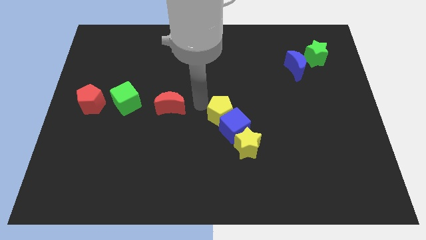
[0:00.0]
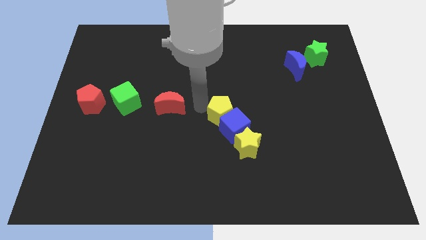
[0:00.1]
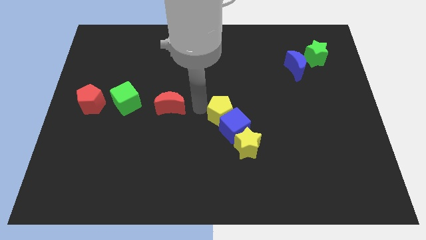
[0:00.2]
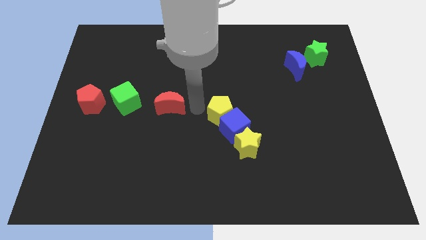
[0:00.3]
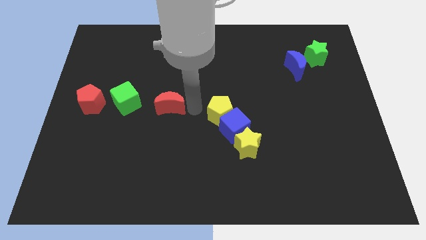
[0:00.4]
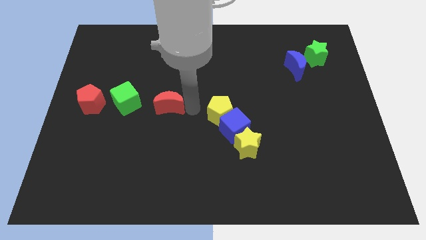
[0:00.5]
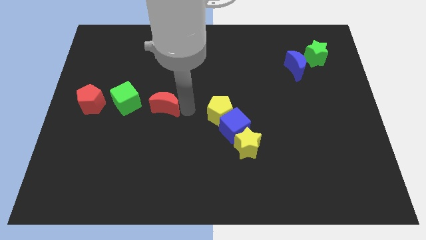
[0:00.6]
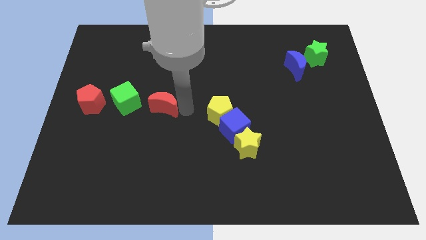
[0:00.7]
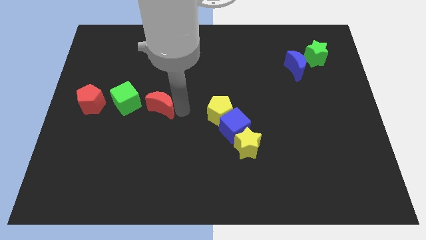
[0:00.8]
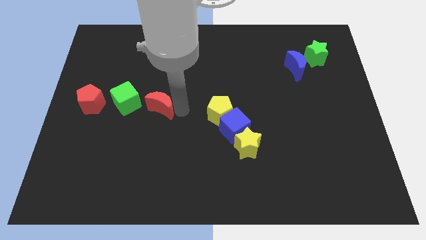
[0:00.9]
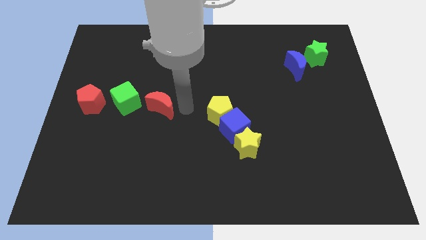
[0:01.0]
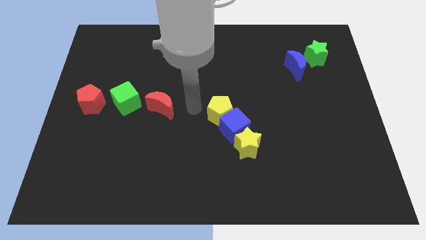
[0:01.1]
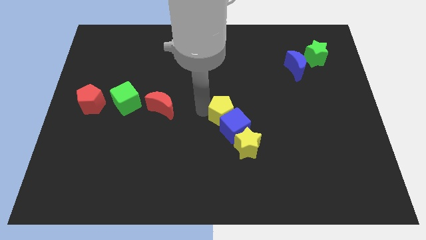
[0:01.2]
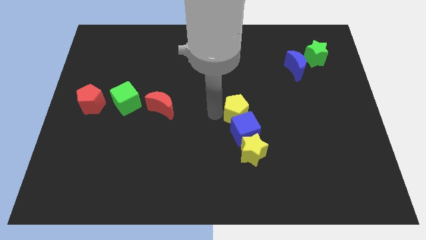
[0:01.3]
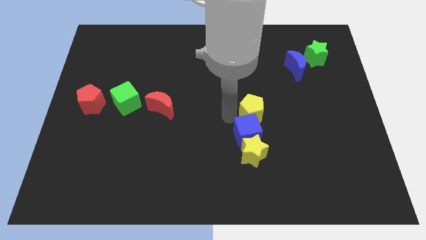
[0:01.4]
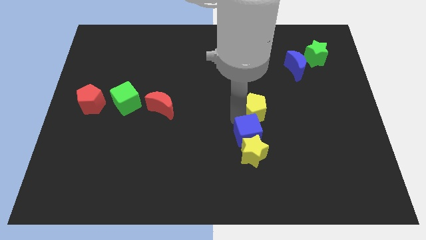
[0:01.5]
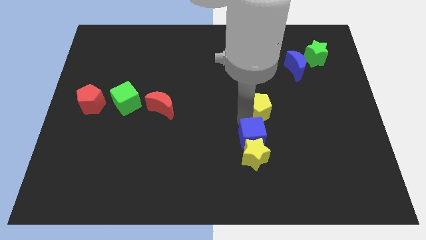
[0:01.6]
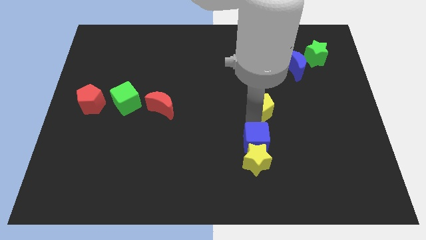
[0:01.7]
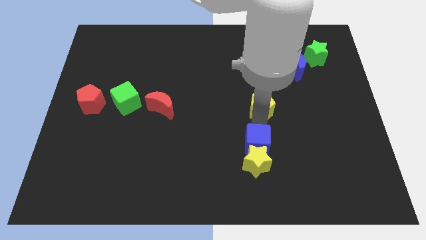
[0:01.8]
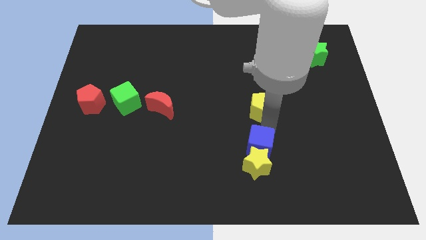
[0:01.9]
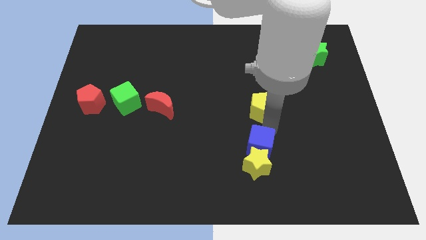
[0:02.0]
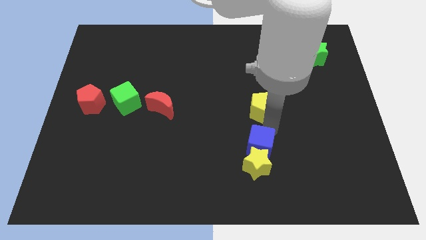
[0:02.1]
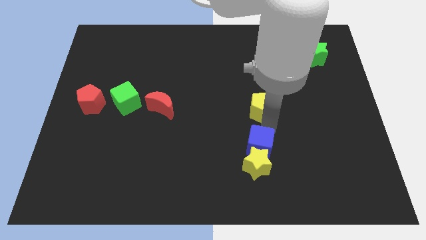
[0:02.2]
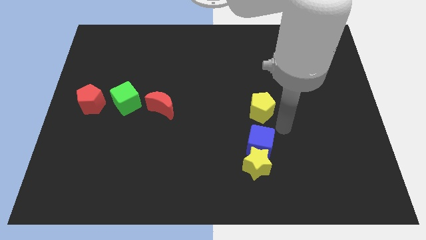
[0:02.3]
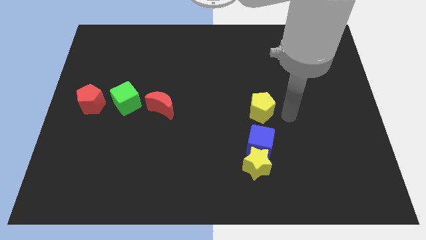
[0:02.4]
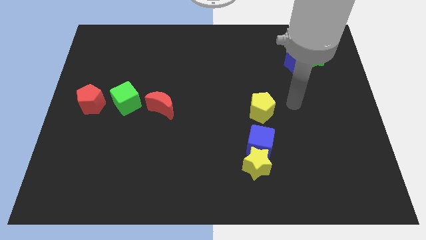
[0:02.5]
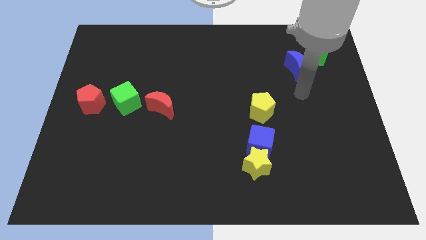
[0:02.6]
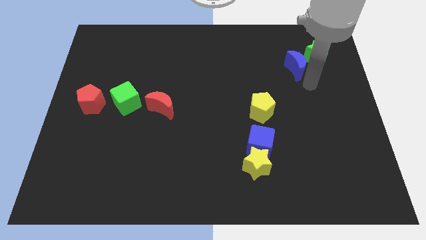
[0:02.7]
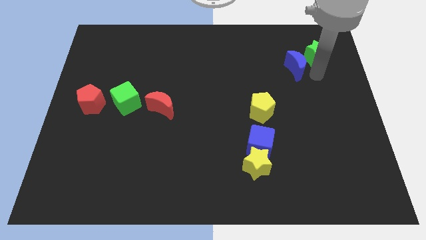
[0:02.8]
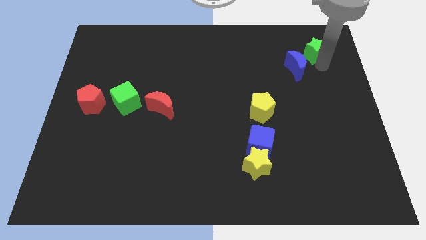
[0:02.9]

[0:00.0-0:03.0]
separate red moon and yellow pentagon from each other

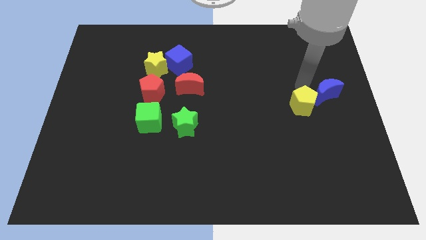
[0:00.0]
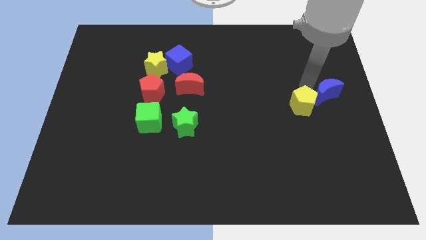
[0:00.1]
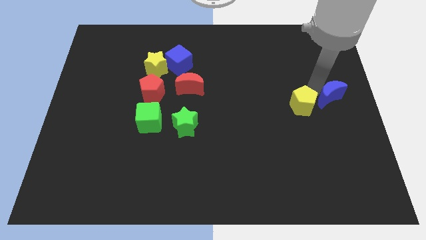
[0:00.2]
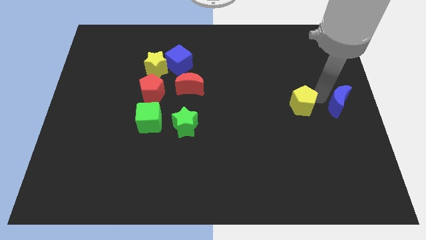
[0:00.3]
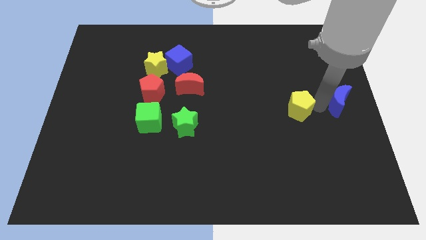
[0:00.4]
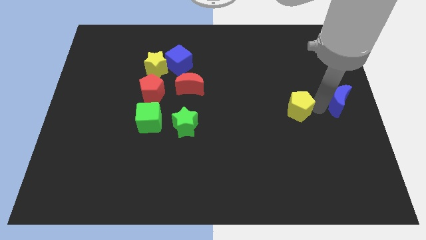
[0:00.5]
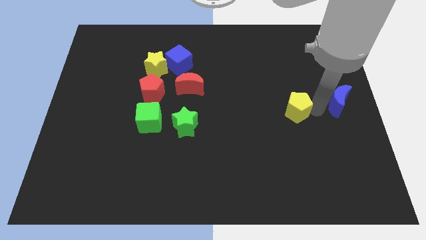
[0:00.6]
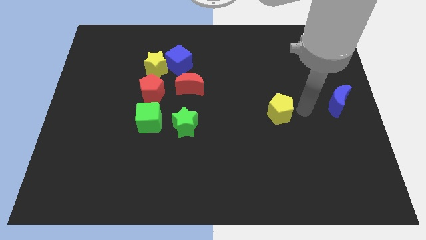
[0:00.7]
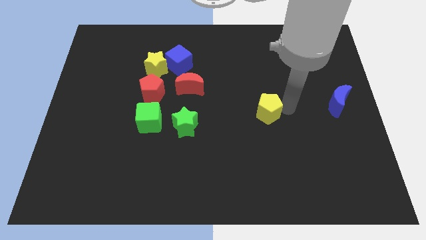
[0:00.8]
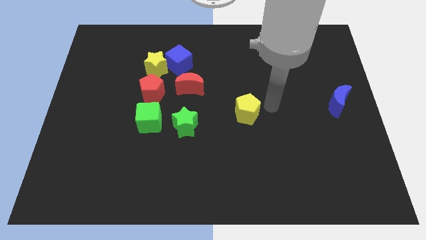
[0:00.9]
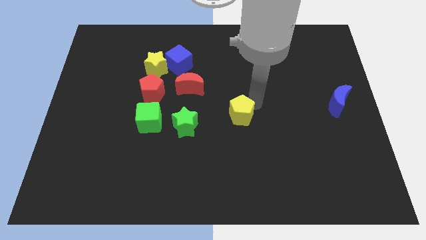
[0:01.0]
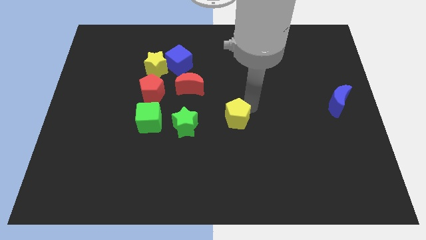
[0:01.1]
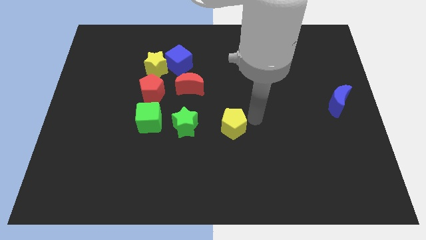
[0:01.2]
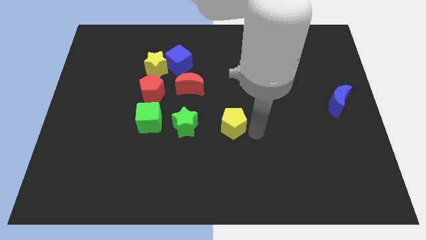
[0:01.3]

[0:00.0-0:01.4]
separate the yellow pentagon from the blue crescent

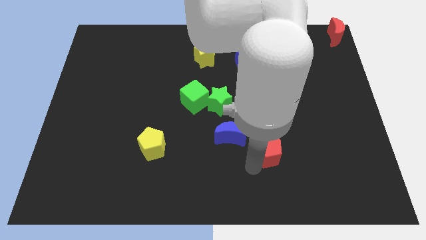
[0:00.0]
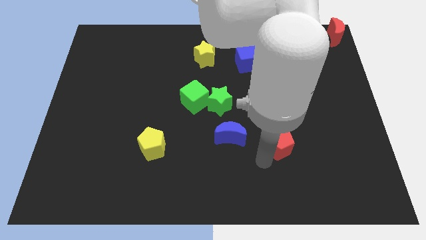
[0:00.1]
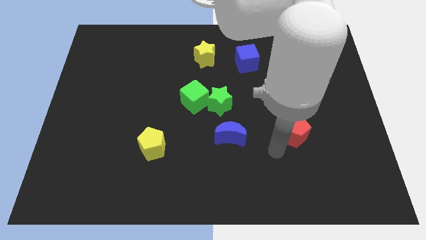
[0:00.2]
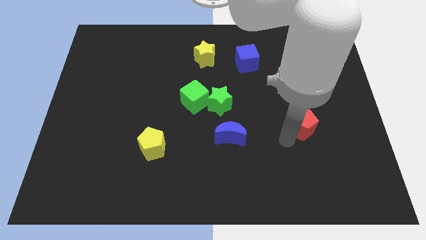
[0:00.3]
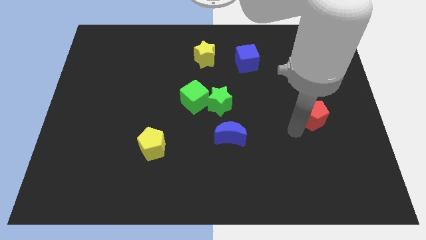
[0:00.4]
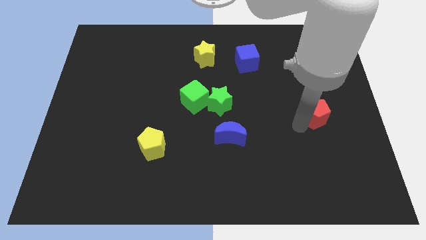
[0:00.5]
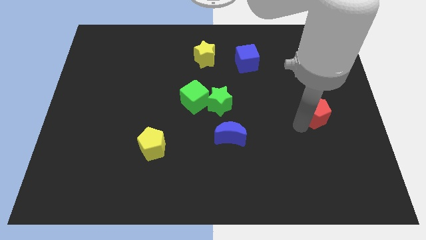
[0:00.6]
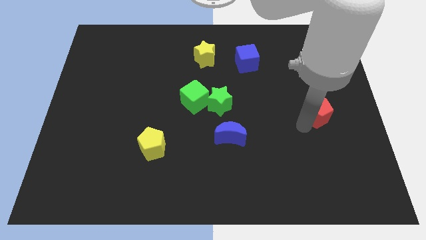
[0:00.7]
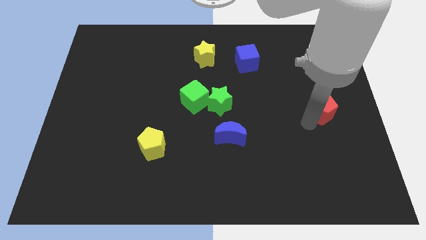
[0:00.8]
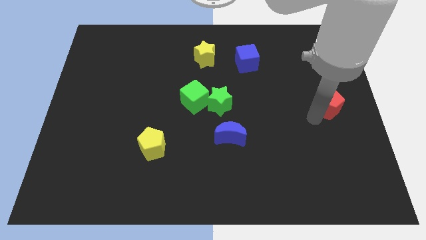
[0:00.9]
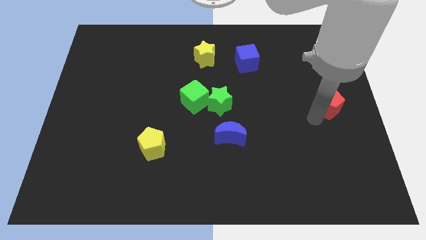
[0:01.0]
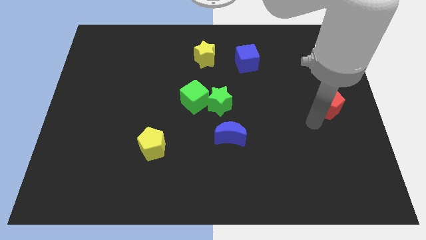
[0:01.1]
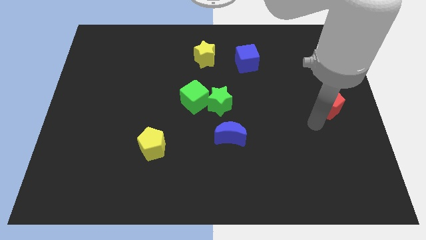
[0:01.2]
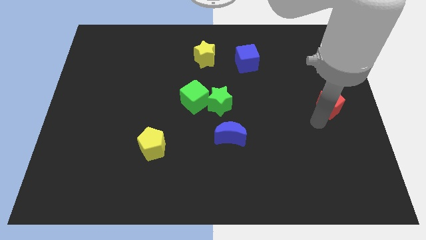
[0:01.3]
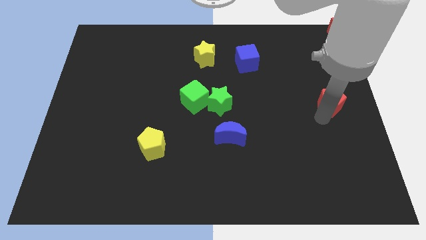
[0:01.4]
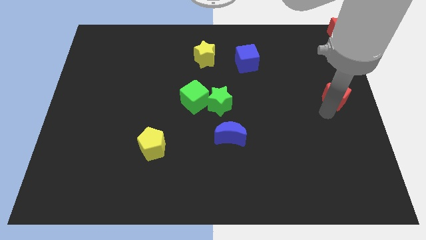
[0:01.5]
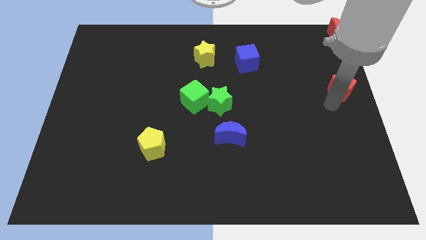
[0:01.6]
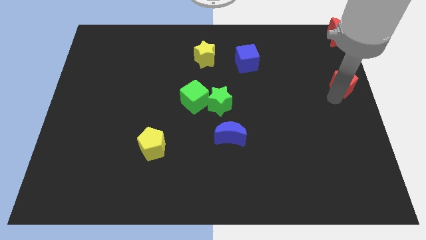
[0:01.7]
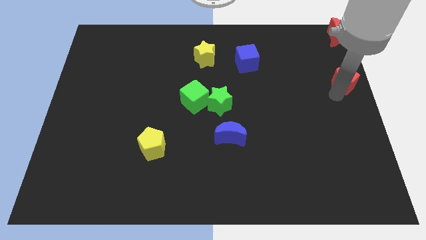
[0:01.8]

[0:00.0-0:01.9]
place the red pentagon below the red moon

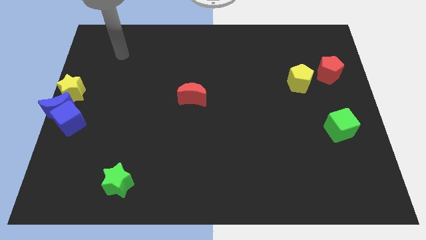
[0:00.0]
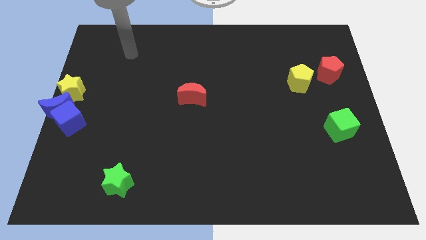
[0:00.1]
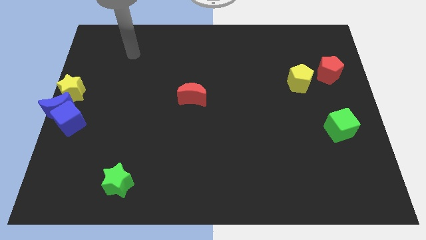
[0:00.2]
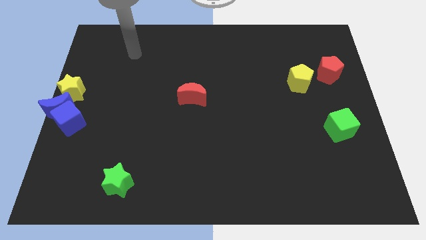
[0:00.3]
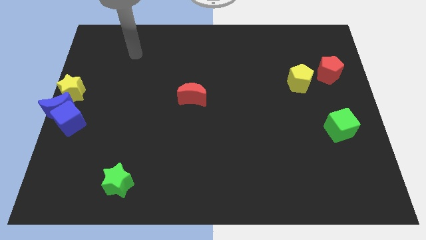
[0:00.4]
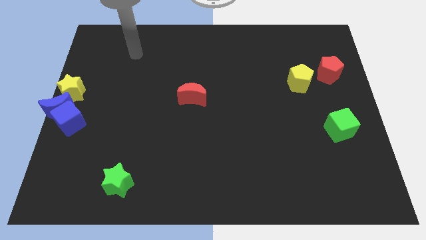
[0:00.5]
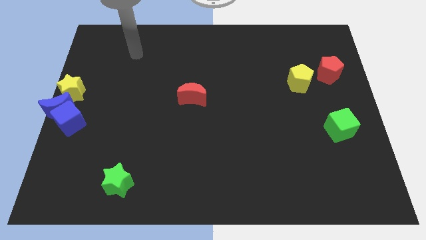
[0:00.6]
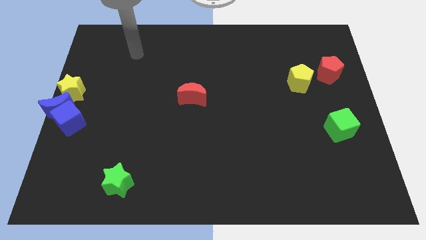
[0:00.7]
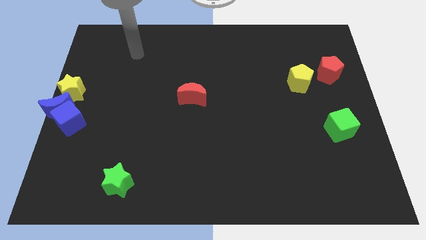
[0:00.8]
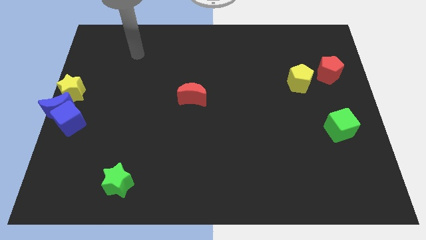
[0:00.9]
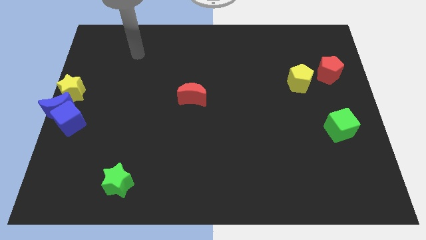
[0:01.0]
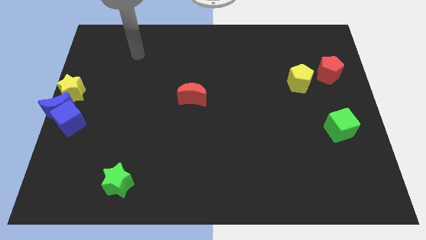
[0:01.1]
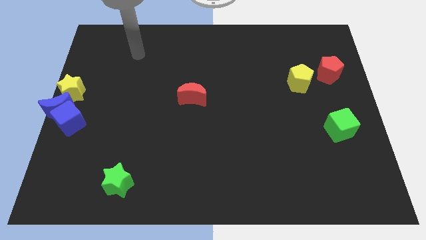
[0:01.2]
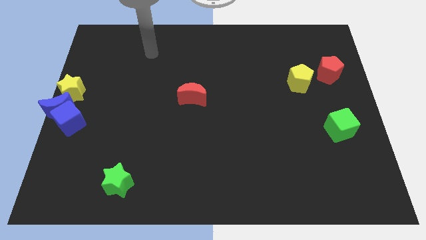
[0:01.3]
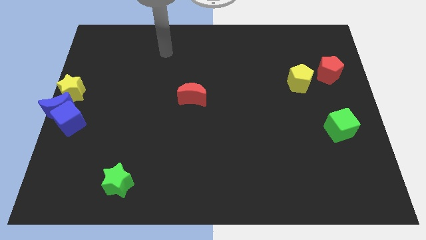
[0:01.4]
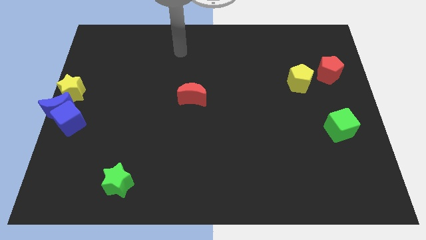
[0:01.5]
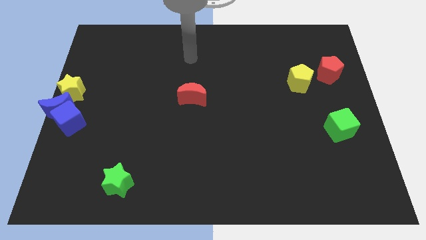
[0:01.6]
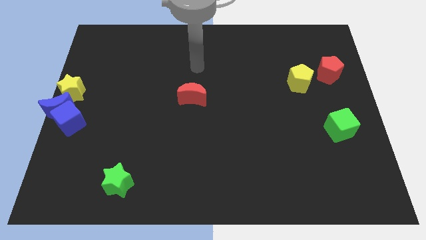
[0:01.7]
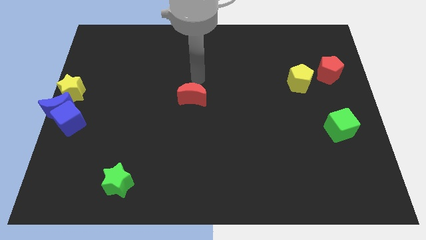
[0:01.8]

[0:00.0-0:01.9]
place your arm to the top of the red moon

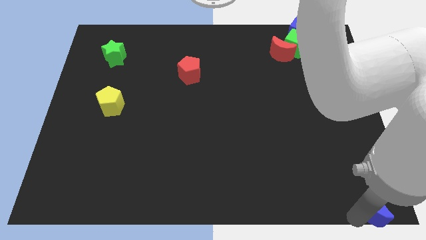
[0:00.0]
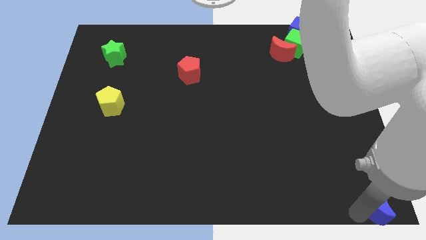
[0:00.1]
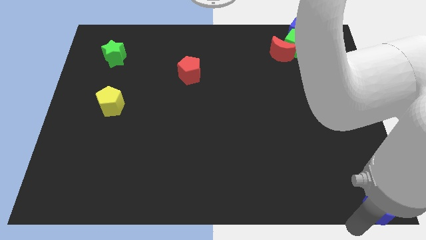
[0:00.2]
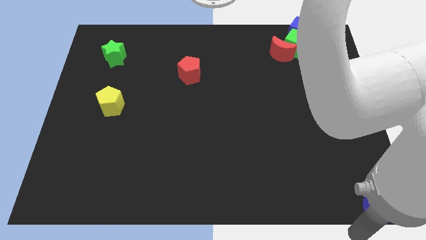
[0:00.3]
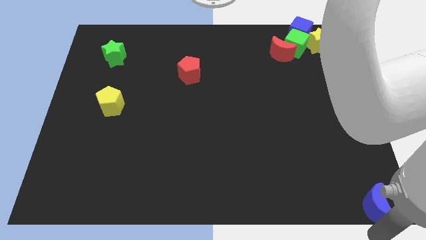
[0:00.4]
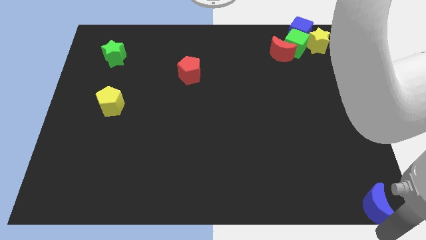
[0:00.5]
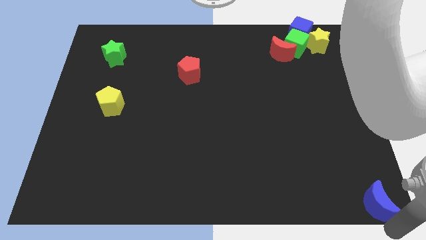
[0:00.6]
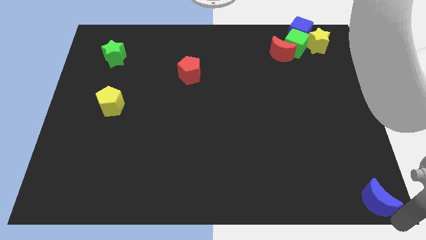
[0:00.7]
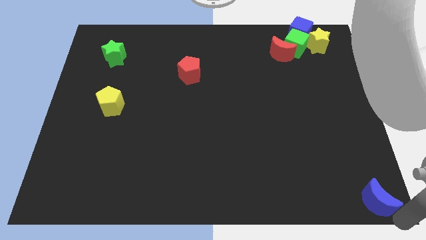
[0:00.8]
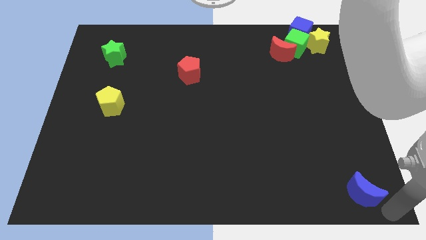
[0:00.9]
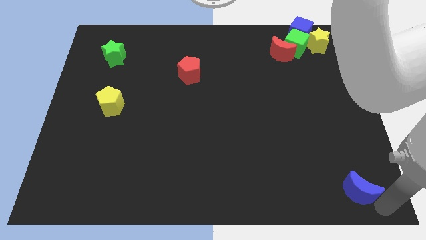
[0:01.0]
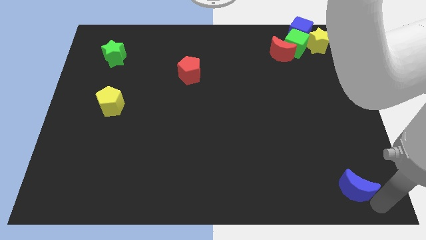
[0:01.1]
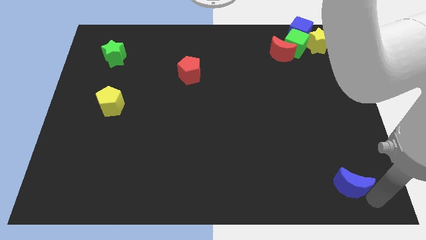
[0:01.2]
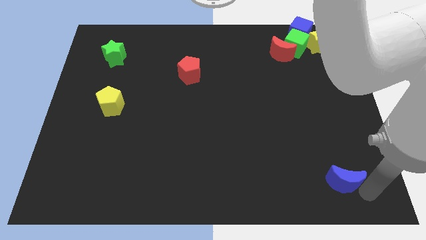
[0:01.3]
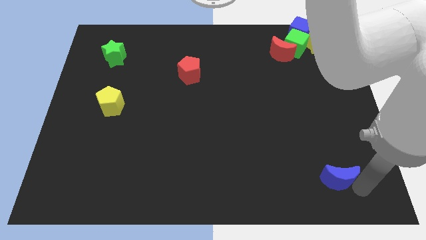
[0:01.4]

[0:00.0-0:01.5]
move the blue moon up slightly
